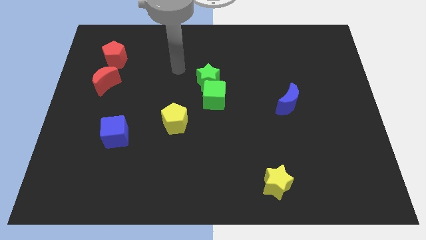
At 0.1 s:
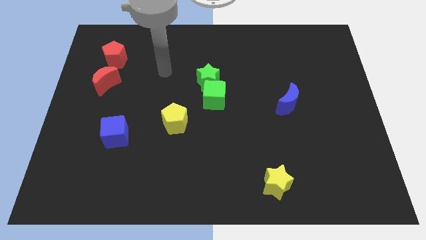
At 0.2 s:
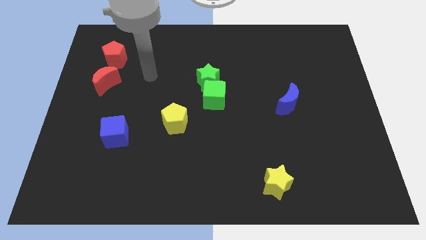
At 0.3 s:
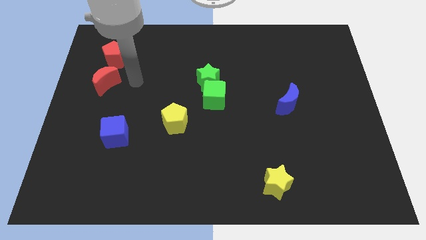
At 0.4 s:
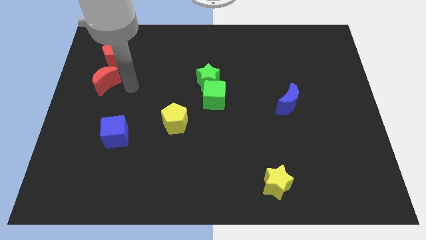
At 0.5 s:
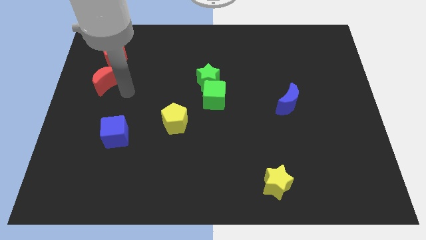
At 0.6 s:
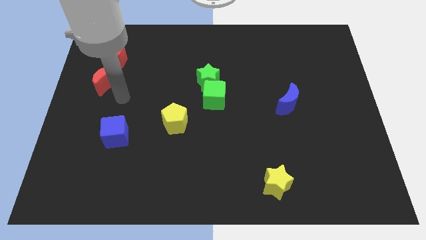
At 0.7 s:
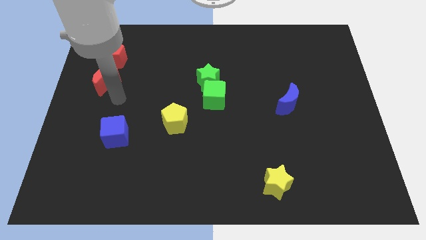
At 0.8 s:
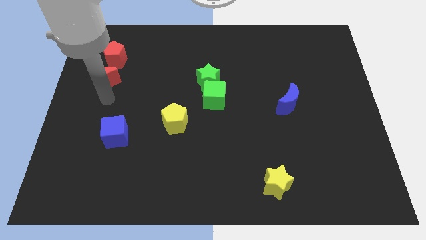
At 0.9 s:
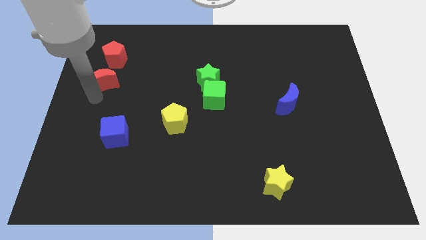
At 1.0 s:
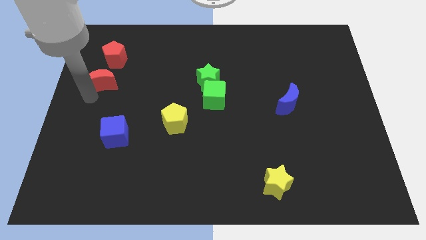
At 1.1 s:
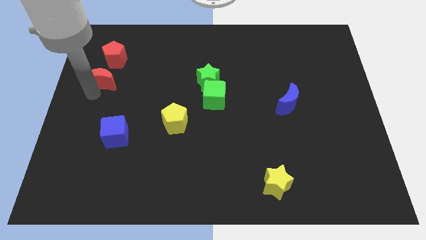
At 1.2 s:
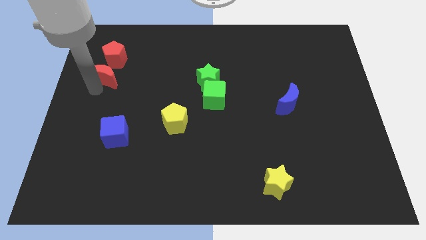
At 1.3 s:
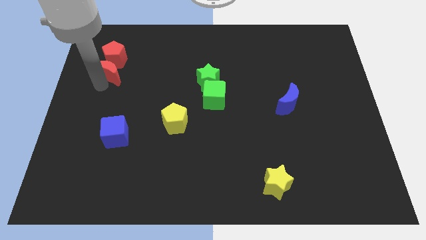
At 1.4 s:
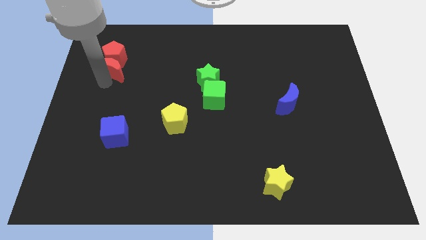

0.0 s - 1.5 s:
move the red moon into red pentagon

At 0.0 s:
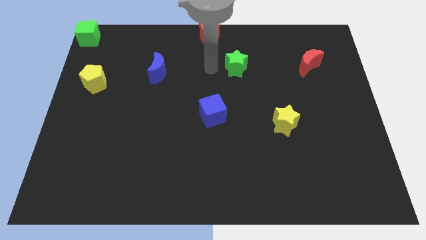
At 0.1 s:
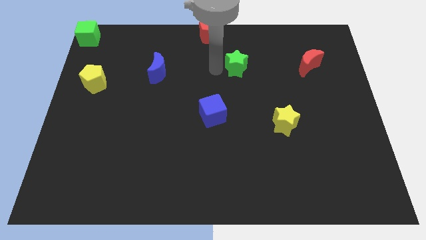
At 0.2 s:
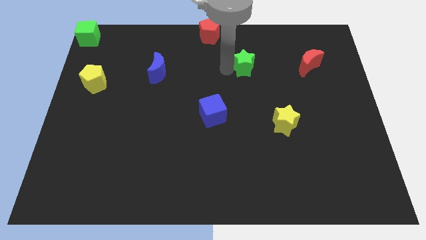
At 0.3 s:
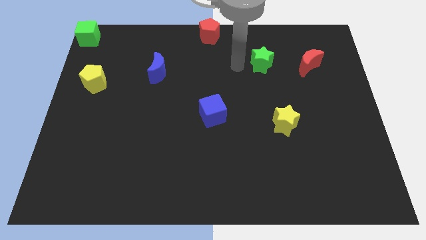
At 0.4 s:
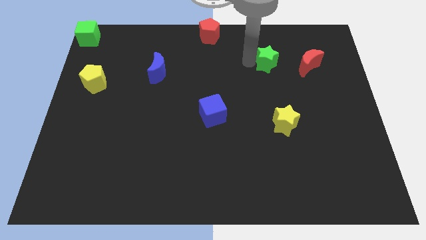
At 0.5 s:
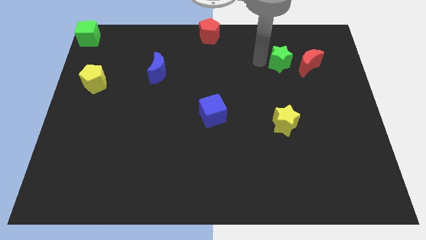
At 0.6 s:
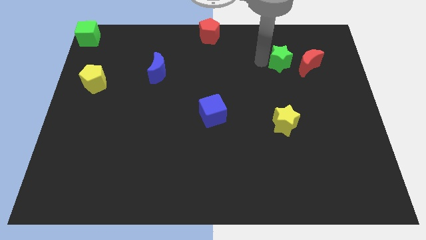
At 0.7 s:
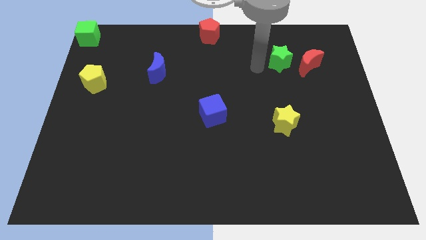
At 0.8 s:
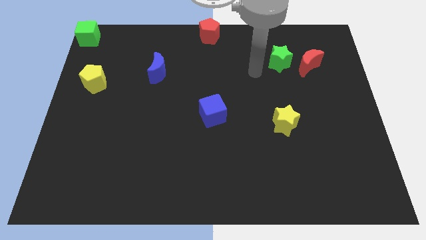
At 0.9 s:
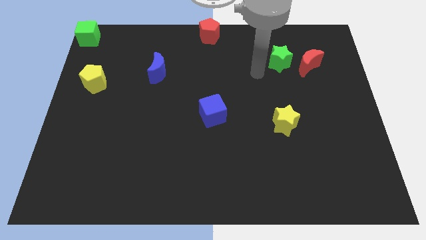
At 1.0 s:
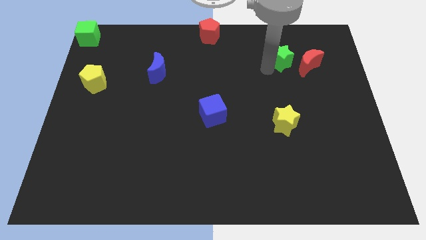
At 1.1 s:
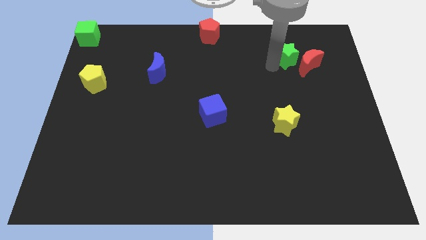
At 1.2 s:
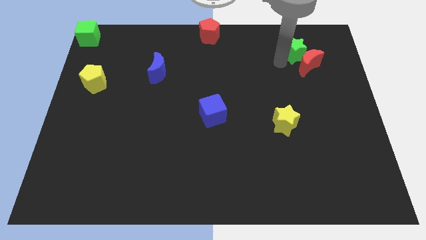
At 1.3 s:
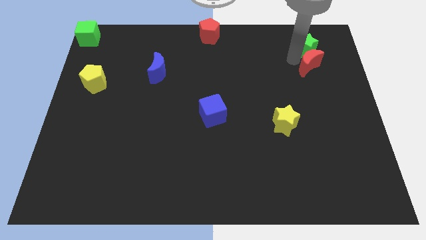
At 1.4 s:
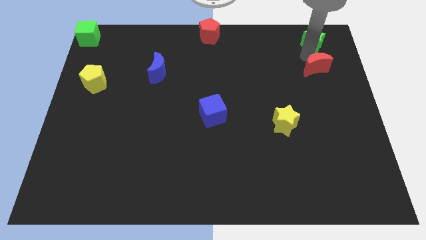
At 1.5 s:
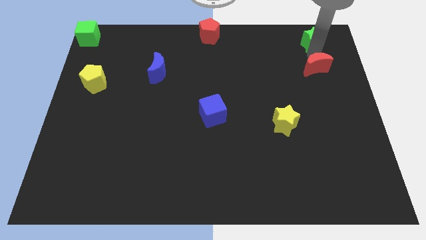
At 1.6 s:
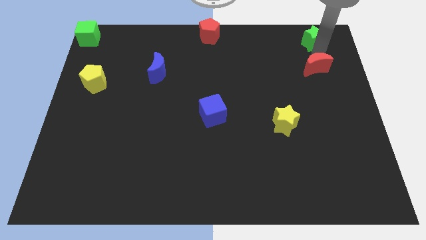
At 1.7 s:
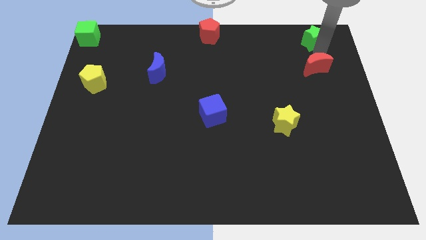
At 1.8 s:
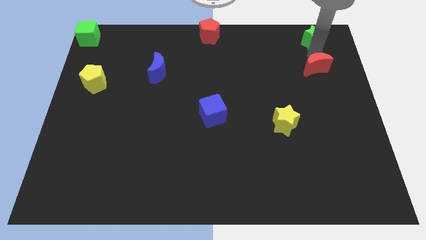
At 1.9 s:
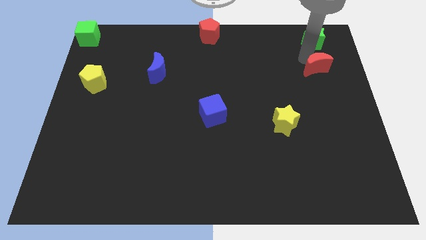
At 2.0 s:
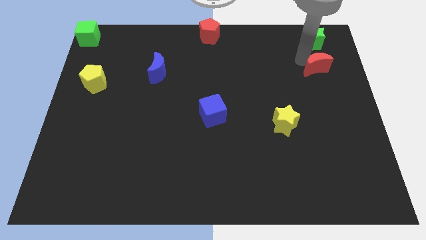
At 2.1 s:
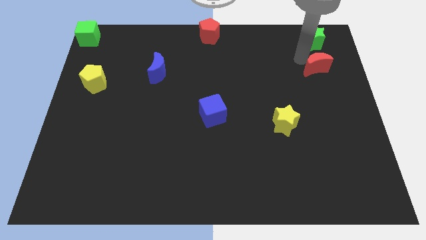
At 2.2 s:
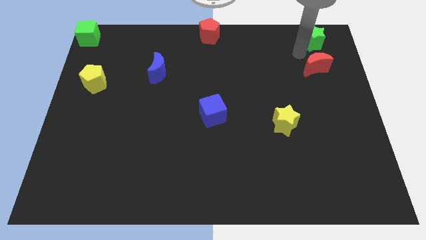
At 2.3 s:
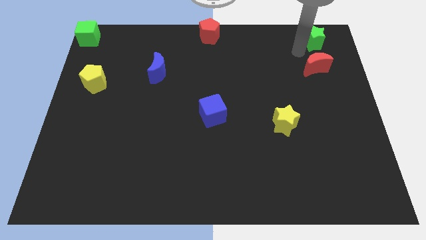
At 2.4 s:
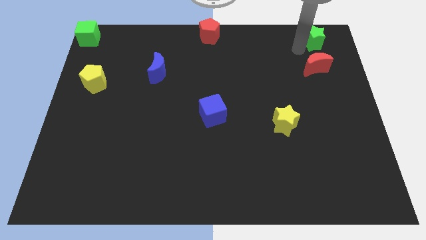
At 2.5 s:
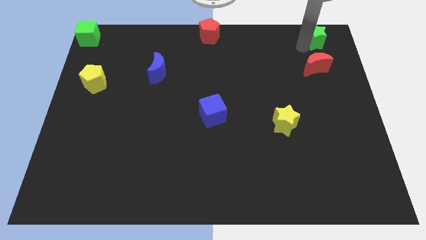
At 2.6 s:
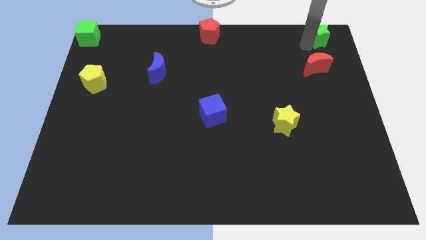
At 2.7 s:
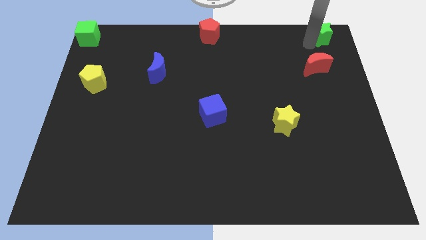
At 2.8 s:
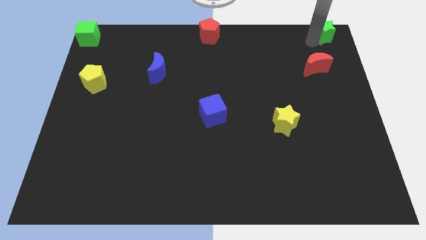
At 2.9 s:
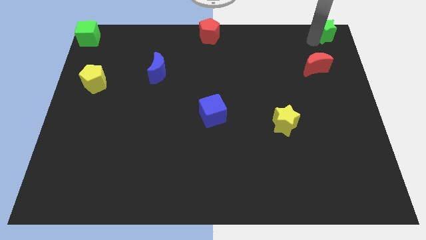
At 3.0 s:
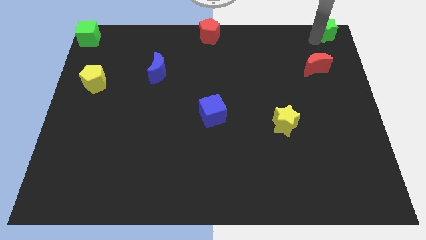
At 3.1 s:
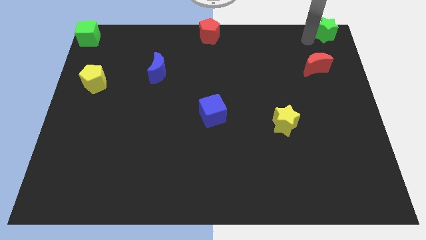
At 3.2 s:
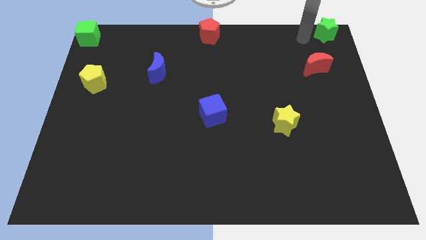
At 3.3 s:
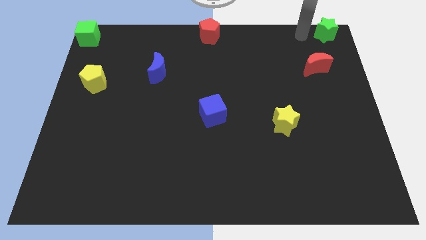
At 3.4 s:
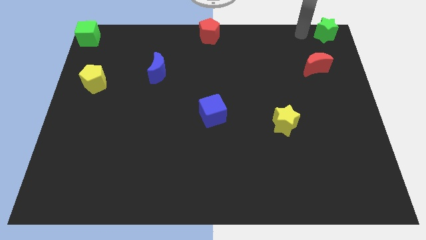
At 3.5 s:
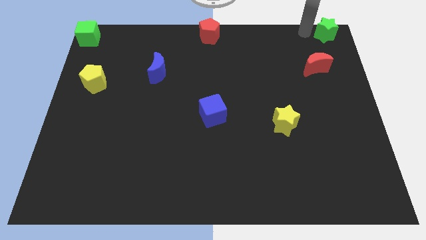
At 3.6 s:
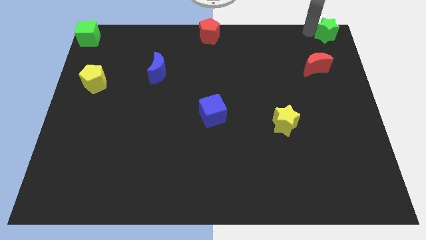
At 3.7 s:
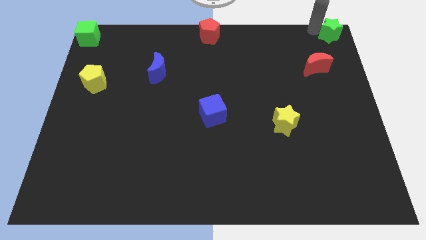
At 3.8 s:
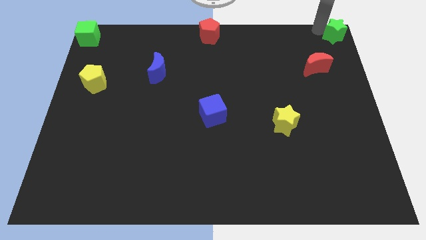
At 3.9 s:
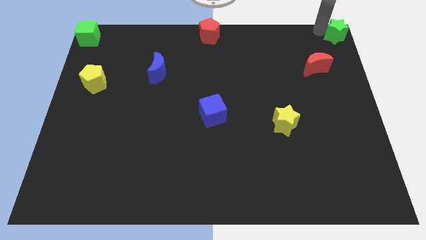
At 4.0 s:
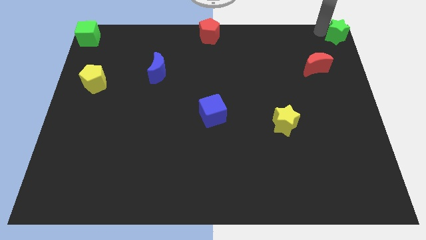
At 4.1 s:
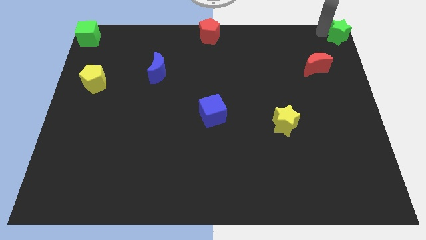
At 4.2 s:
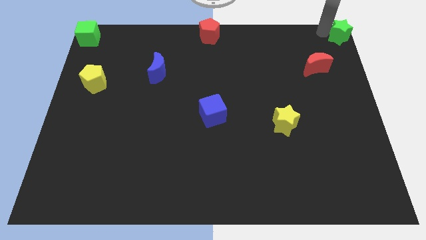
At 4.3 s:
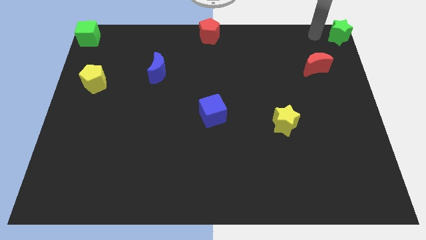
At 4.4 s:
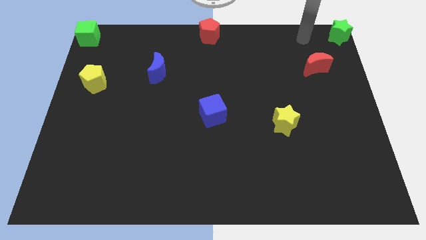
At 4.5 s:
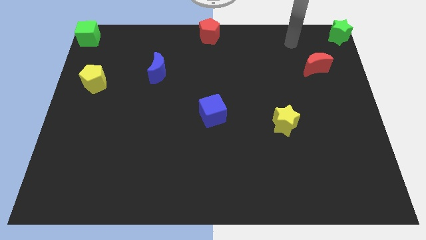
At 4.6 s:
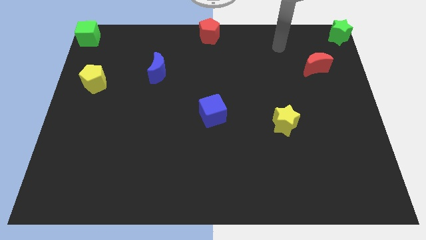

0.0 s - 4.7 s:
move the green star to the top right corner of the board

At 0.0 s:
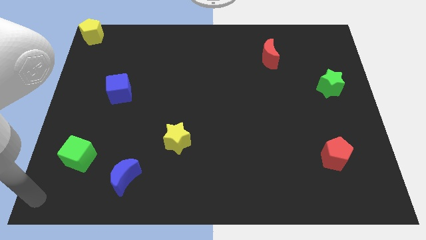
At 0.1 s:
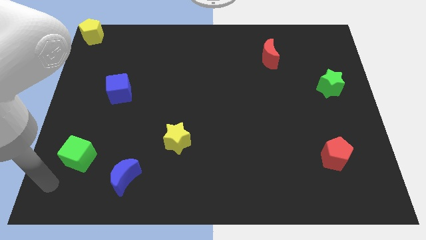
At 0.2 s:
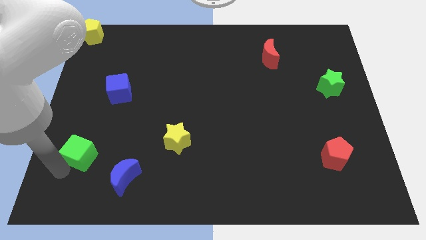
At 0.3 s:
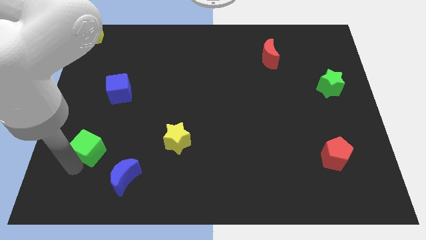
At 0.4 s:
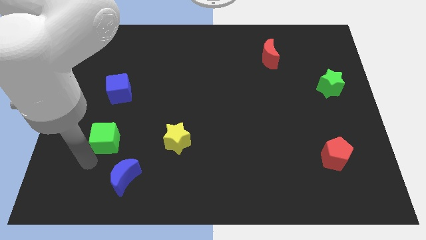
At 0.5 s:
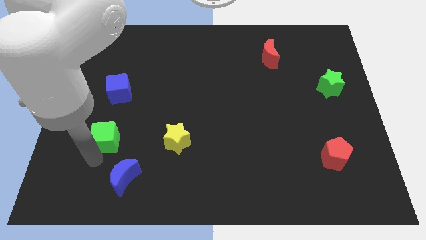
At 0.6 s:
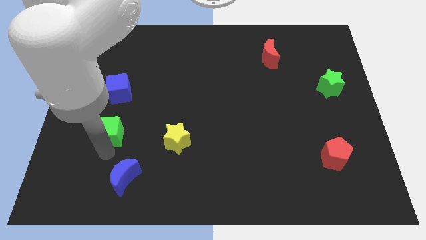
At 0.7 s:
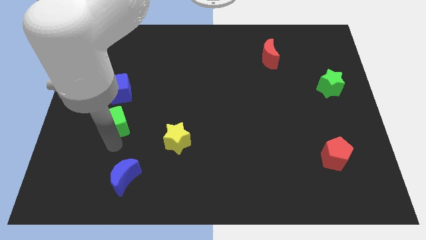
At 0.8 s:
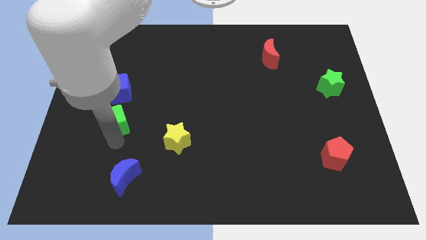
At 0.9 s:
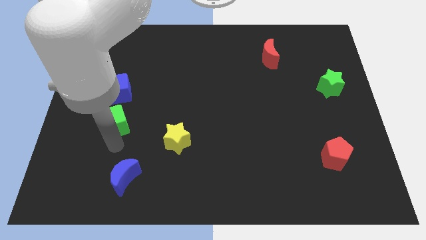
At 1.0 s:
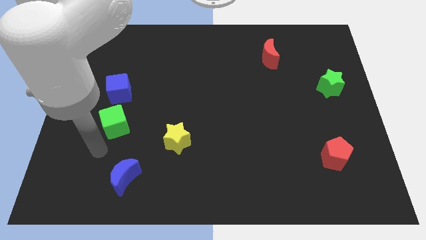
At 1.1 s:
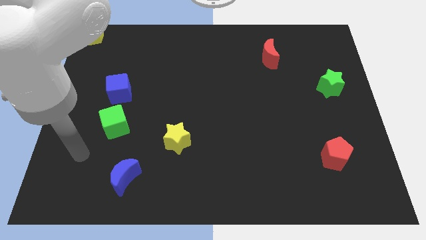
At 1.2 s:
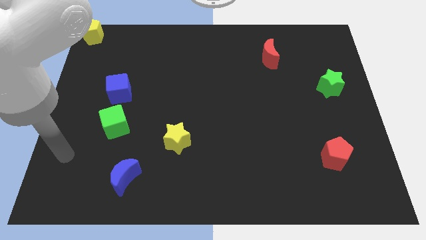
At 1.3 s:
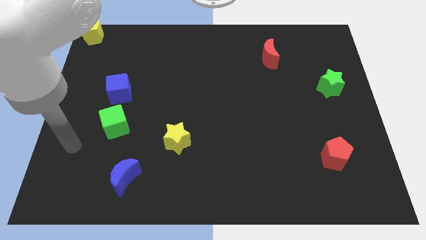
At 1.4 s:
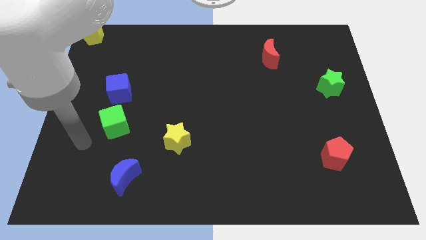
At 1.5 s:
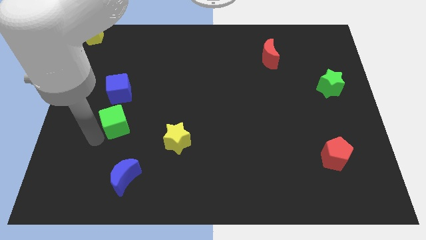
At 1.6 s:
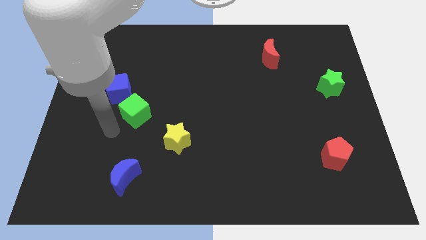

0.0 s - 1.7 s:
push green cube above blue crescent

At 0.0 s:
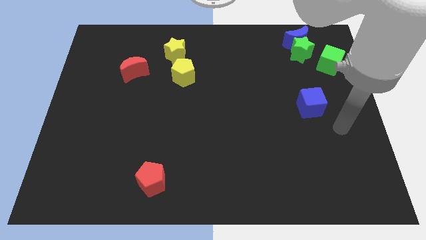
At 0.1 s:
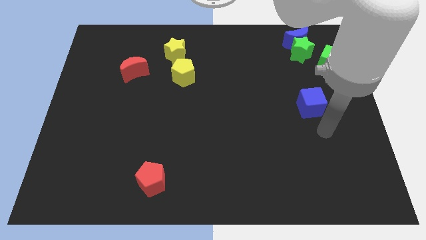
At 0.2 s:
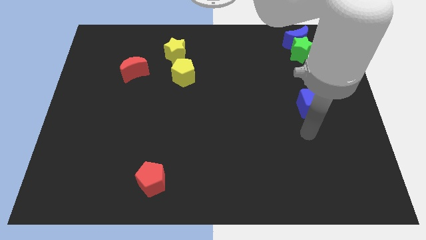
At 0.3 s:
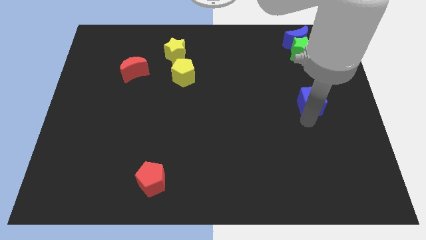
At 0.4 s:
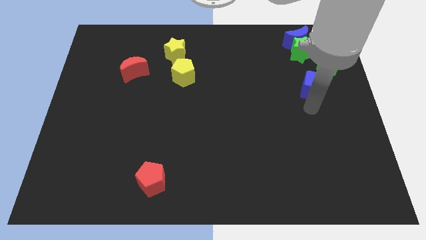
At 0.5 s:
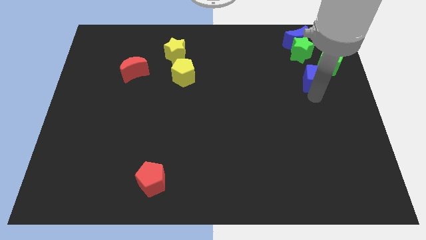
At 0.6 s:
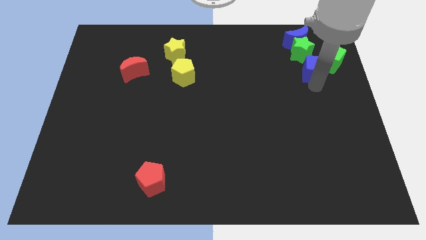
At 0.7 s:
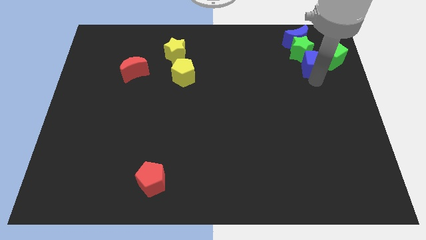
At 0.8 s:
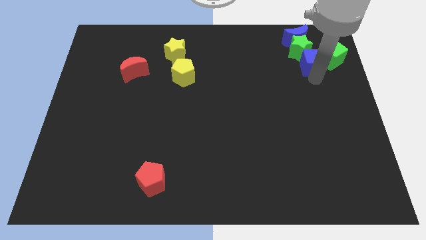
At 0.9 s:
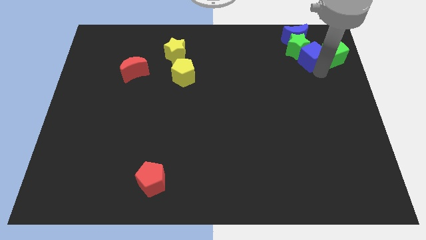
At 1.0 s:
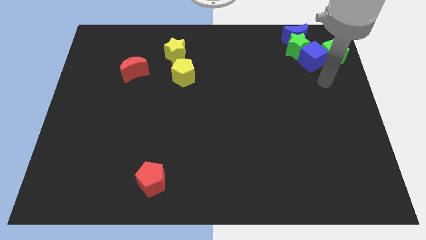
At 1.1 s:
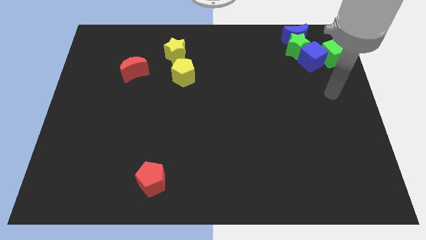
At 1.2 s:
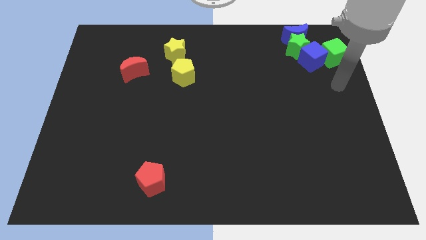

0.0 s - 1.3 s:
push the blue cube into the green star
